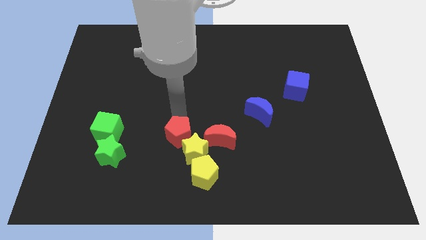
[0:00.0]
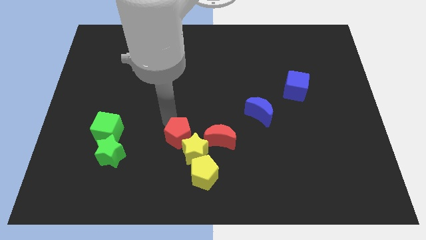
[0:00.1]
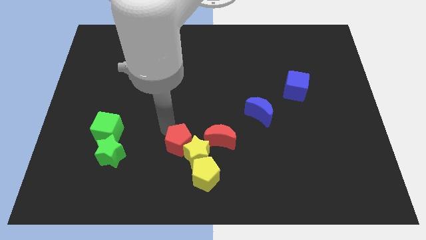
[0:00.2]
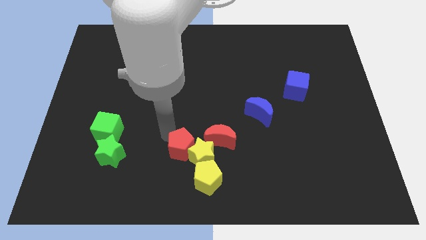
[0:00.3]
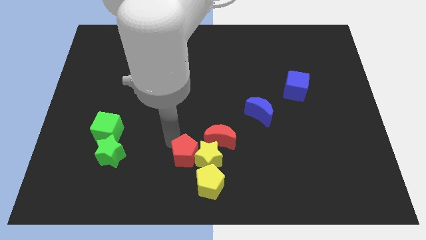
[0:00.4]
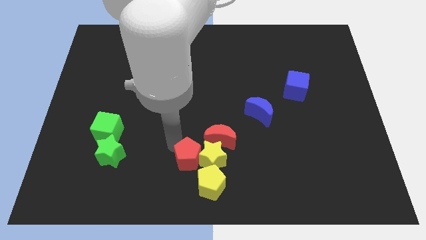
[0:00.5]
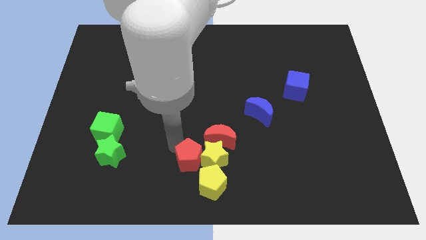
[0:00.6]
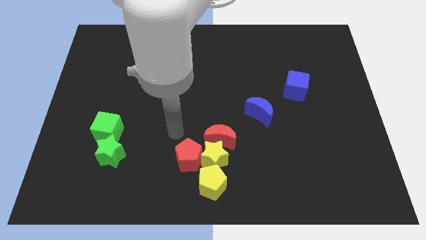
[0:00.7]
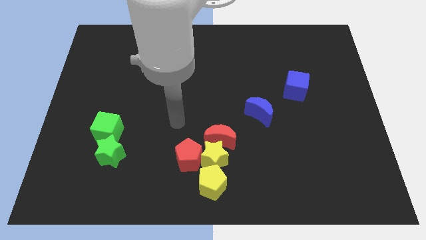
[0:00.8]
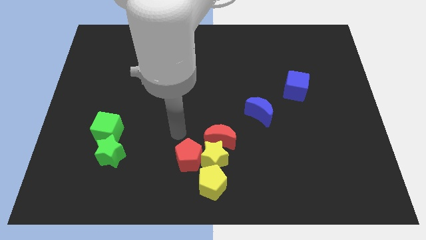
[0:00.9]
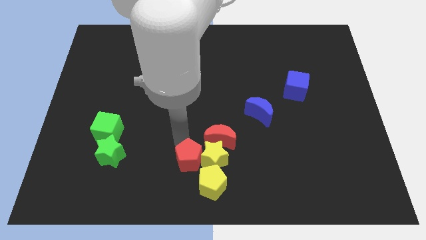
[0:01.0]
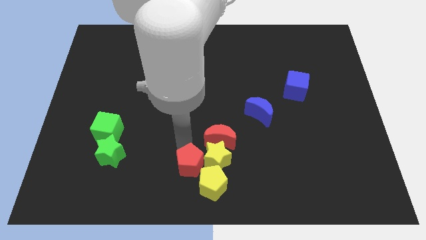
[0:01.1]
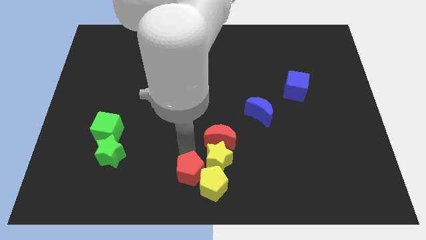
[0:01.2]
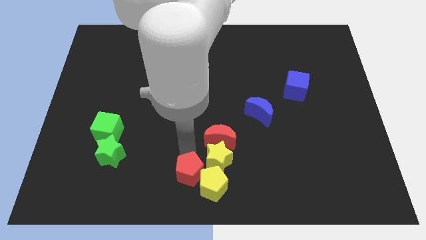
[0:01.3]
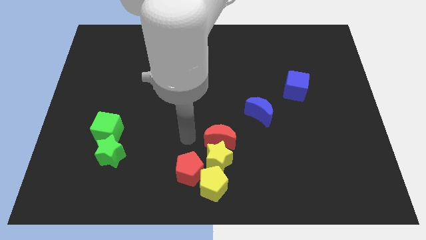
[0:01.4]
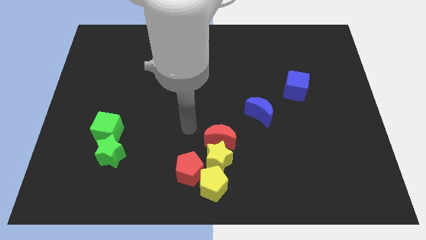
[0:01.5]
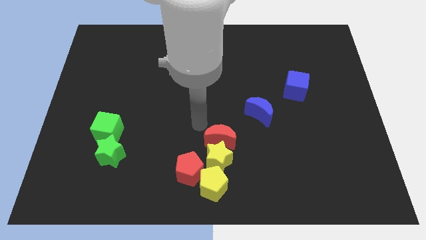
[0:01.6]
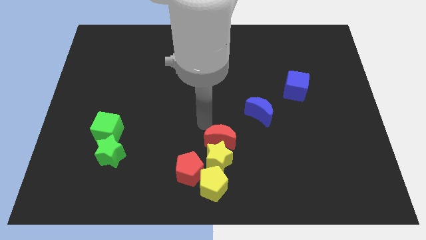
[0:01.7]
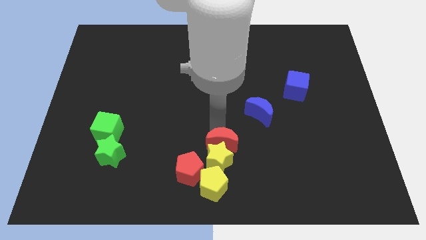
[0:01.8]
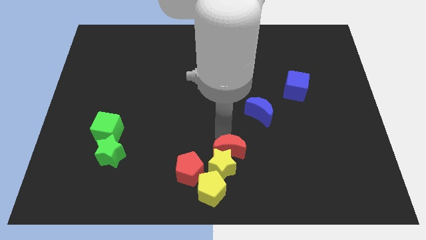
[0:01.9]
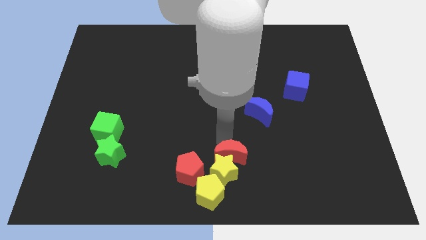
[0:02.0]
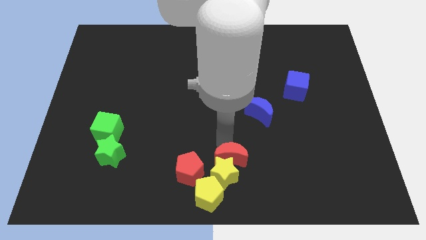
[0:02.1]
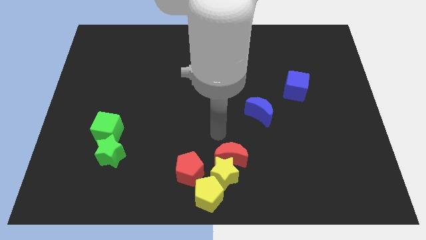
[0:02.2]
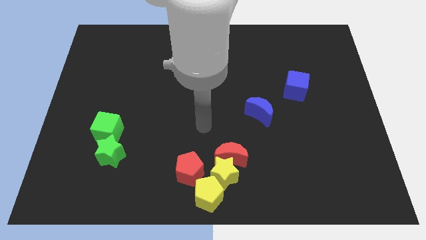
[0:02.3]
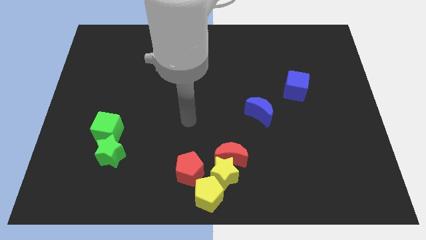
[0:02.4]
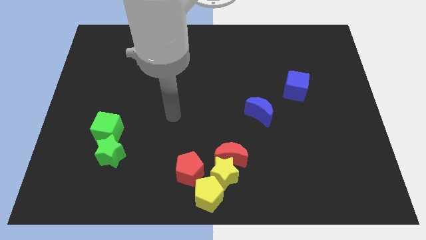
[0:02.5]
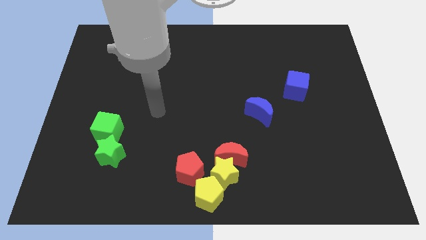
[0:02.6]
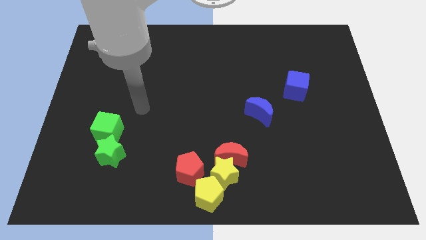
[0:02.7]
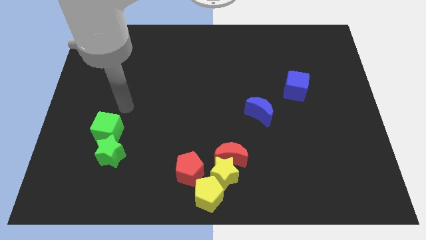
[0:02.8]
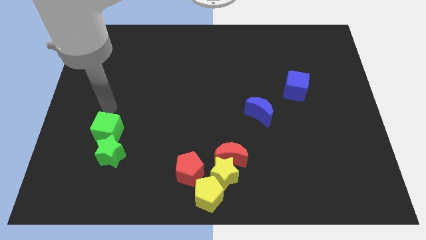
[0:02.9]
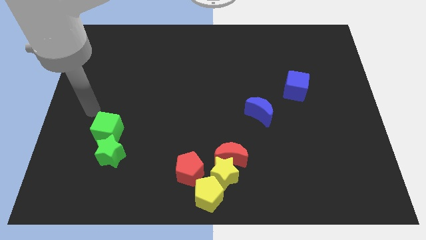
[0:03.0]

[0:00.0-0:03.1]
slide the red blocks and yellow blocks to the bottom center

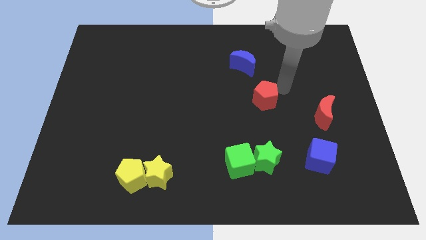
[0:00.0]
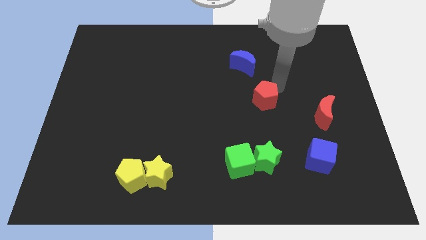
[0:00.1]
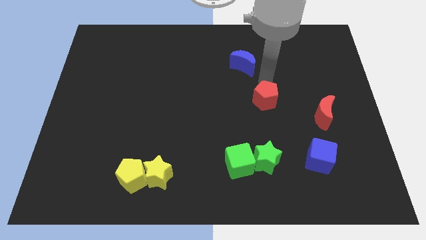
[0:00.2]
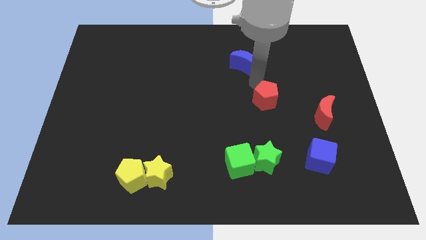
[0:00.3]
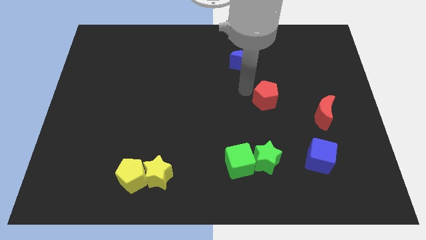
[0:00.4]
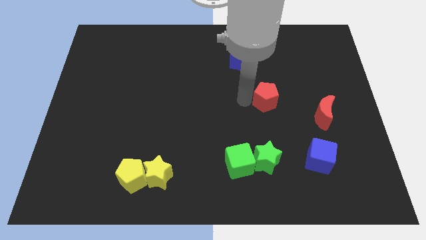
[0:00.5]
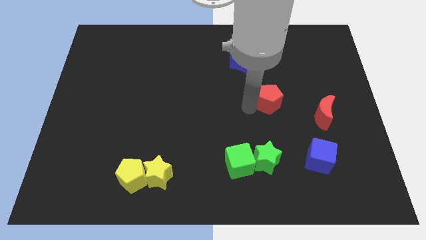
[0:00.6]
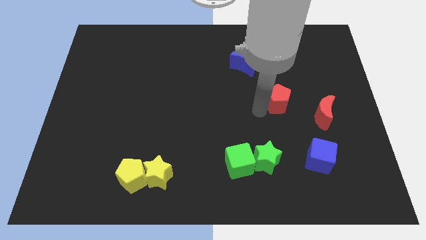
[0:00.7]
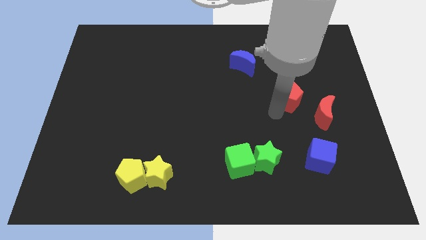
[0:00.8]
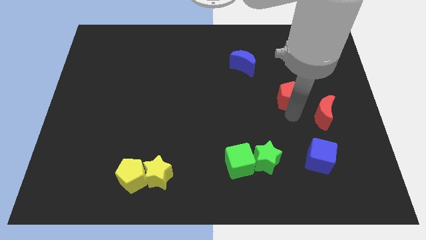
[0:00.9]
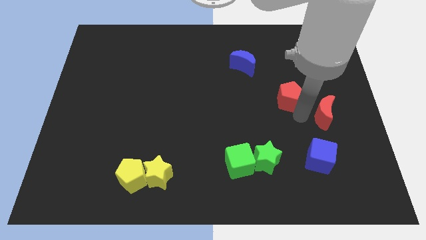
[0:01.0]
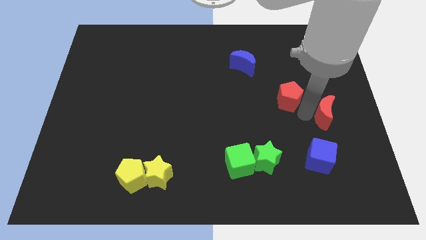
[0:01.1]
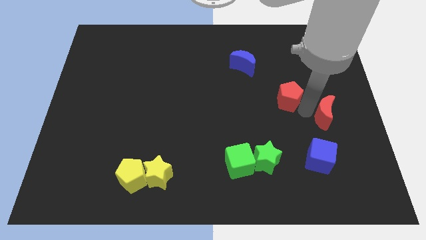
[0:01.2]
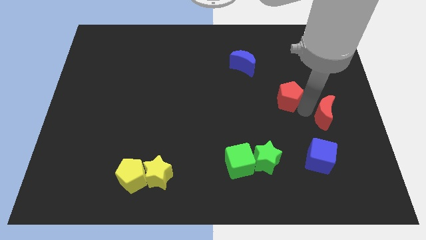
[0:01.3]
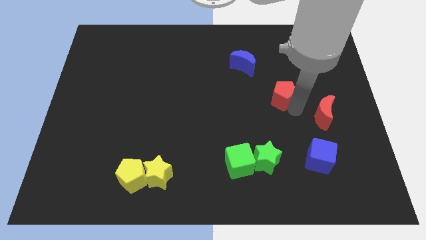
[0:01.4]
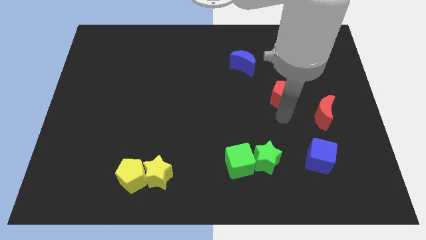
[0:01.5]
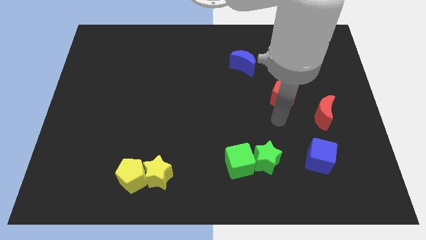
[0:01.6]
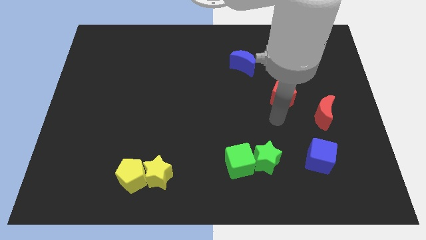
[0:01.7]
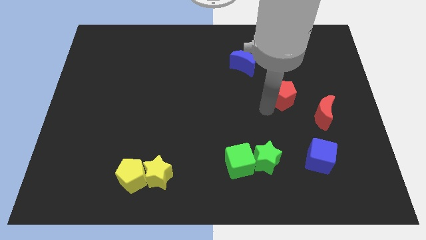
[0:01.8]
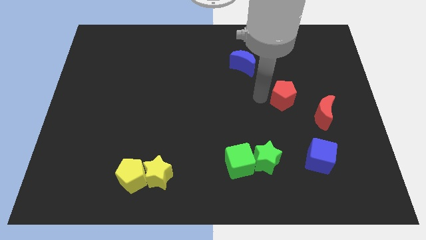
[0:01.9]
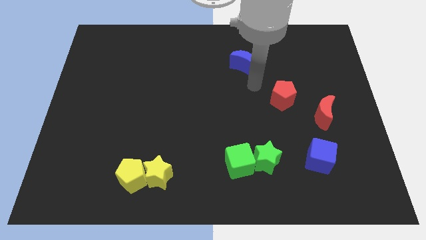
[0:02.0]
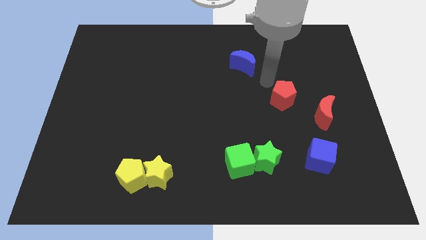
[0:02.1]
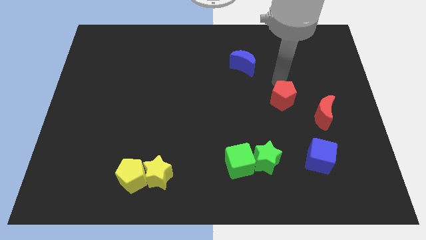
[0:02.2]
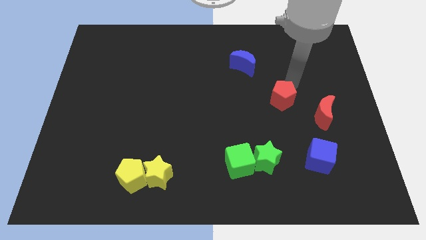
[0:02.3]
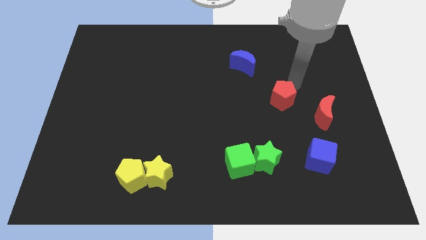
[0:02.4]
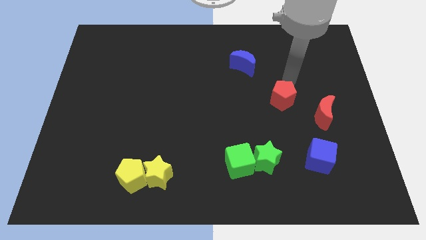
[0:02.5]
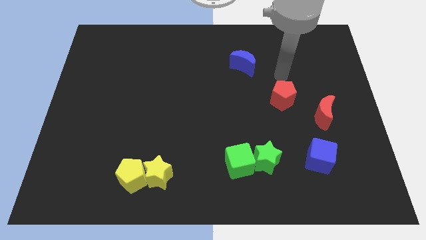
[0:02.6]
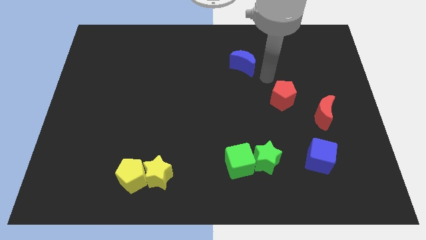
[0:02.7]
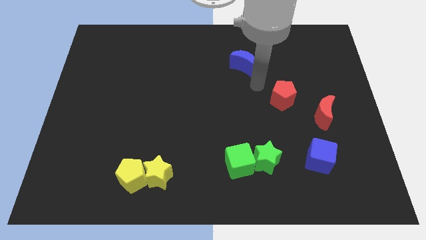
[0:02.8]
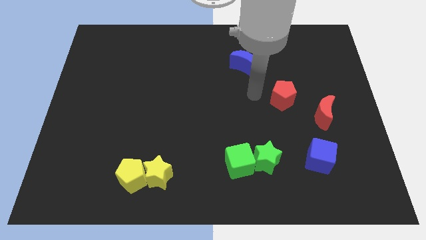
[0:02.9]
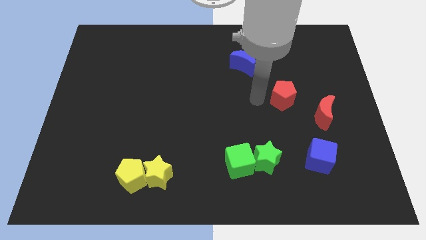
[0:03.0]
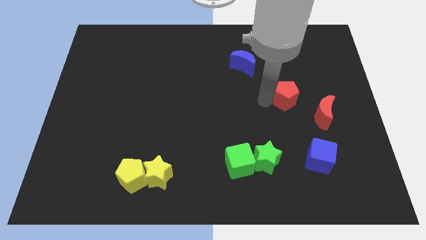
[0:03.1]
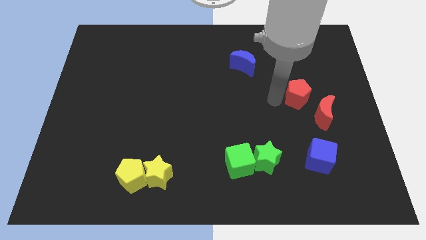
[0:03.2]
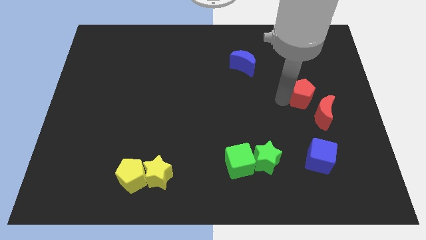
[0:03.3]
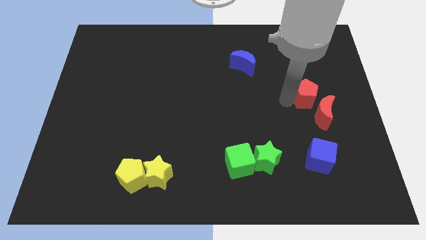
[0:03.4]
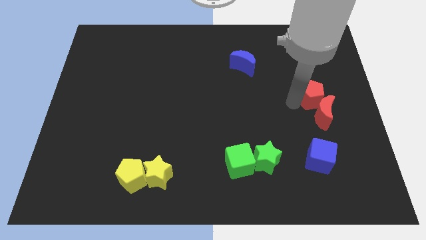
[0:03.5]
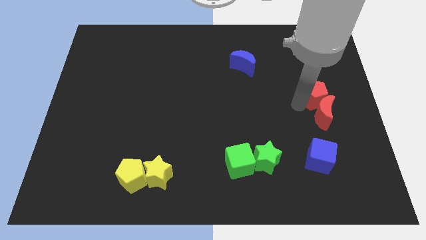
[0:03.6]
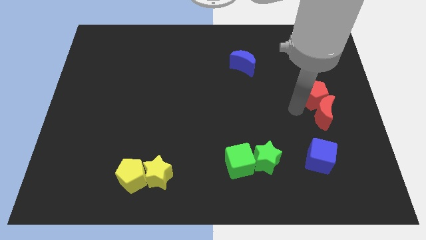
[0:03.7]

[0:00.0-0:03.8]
place the red pentagon to the top left of red moon

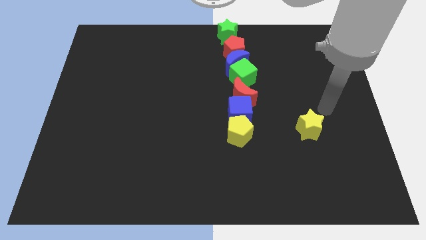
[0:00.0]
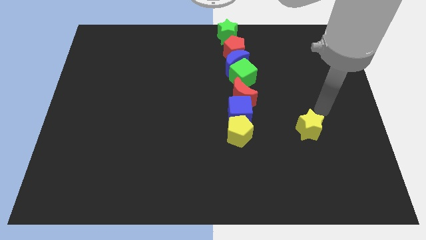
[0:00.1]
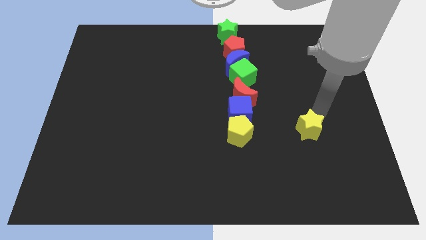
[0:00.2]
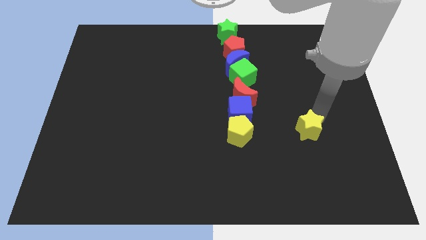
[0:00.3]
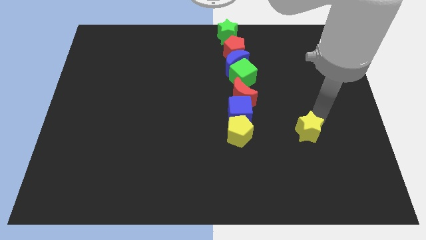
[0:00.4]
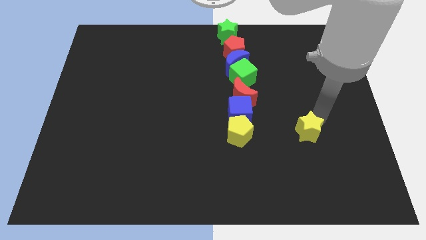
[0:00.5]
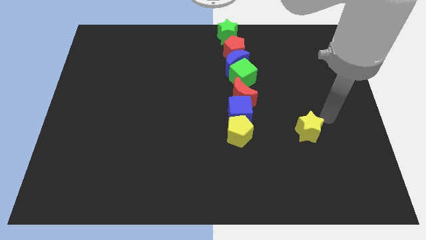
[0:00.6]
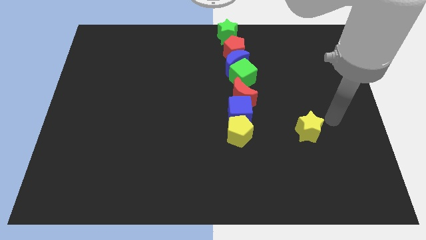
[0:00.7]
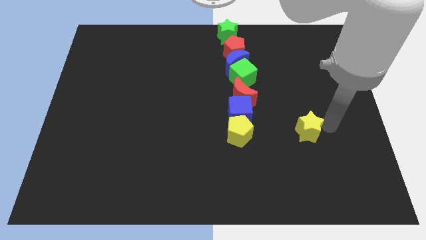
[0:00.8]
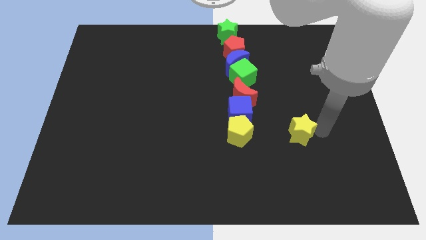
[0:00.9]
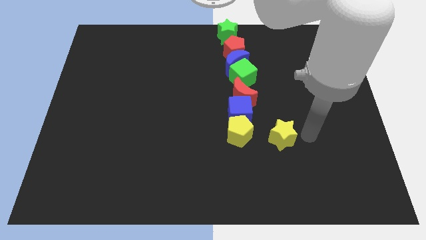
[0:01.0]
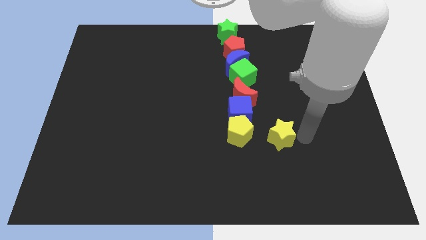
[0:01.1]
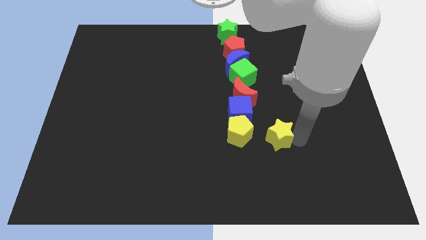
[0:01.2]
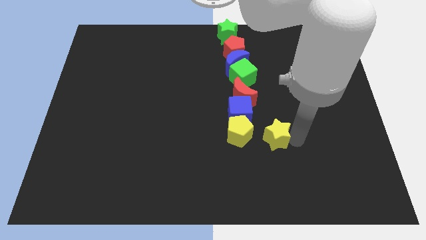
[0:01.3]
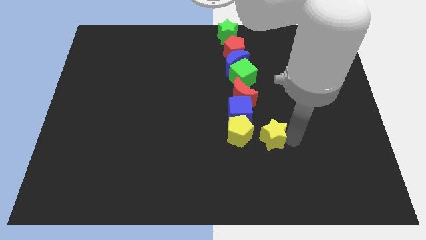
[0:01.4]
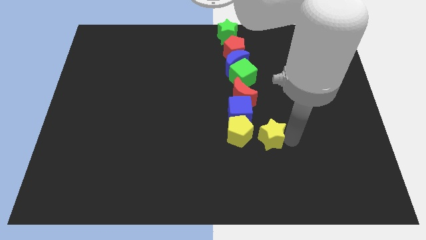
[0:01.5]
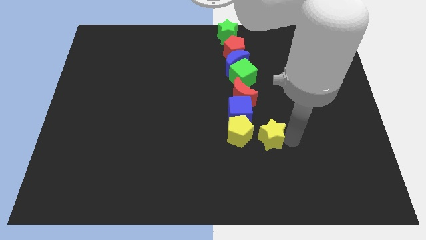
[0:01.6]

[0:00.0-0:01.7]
move the yellow star right to the yellow pentagon

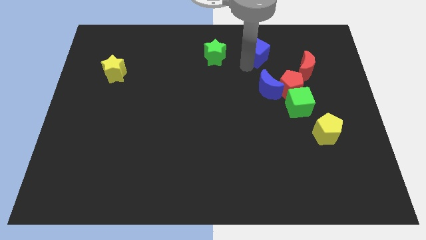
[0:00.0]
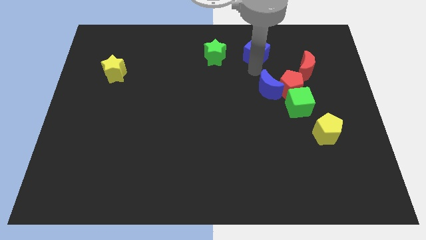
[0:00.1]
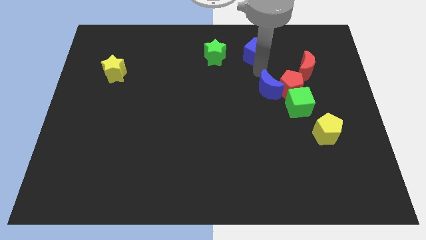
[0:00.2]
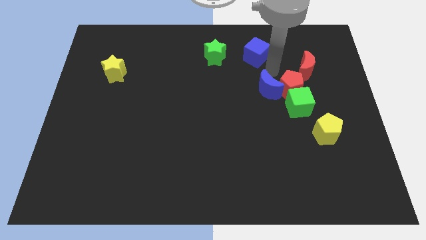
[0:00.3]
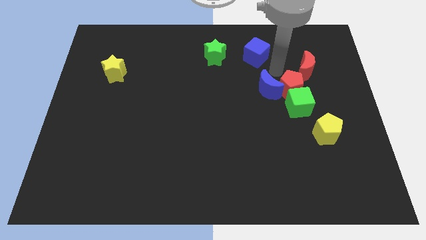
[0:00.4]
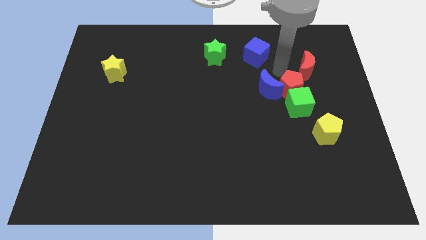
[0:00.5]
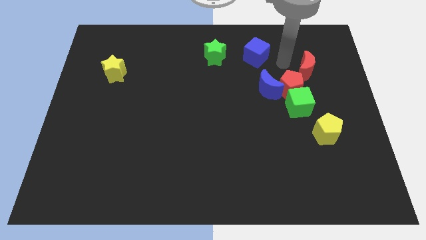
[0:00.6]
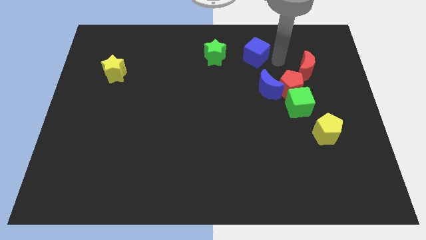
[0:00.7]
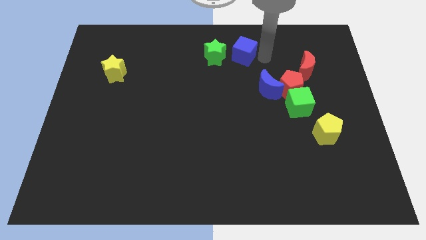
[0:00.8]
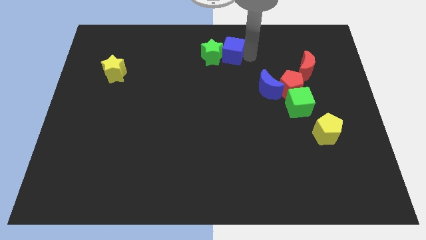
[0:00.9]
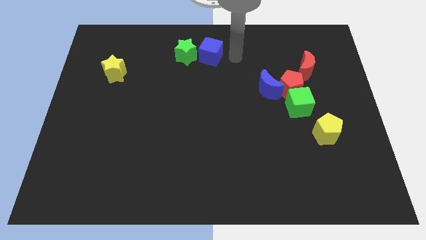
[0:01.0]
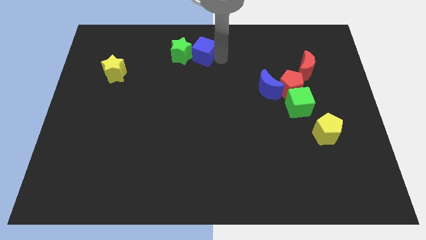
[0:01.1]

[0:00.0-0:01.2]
push blue cube into the green star
